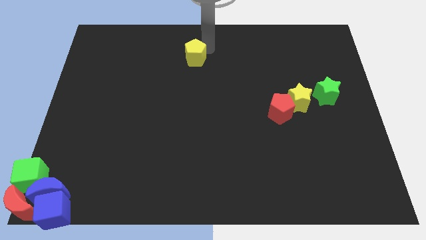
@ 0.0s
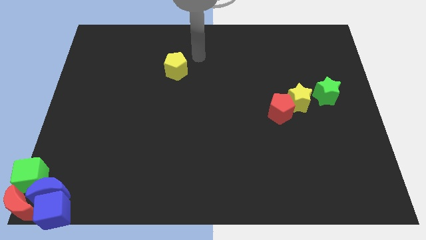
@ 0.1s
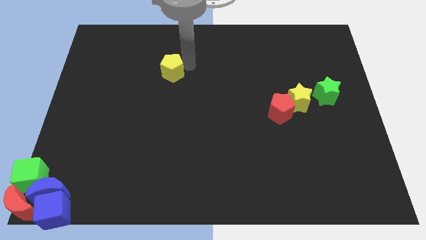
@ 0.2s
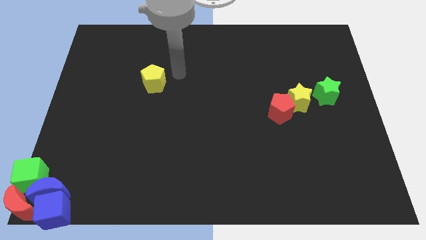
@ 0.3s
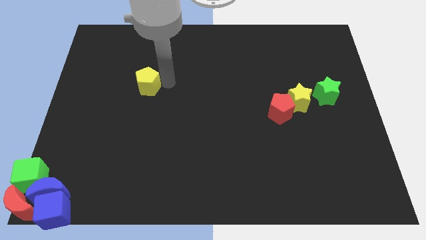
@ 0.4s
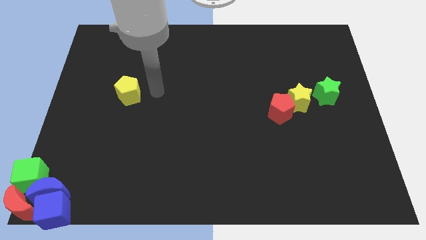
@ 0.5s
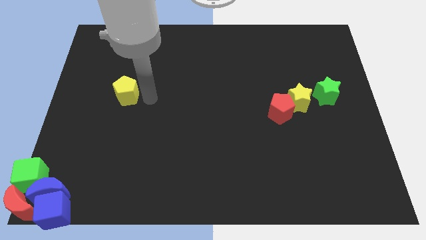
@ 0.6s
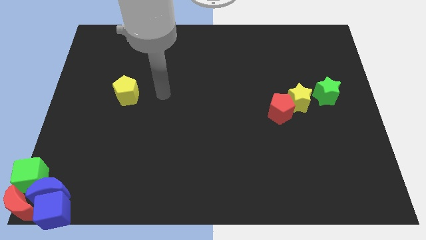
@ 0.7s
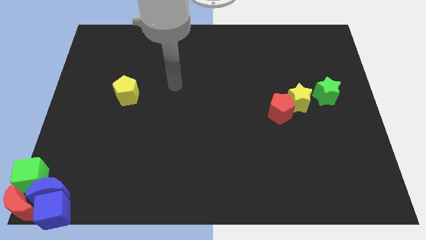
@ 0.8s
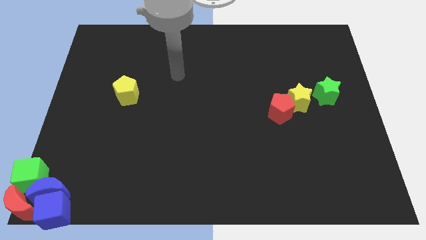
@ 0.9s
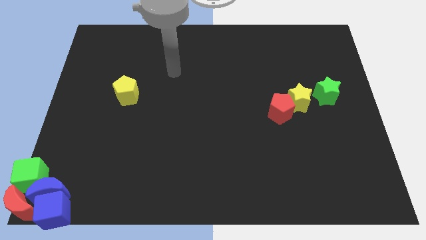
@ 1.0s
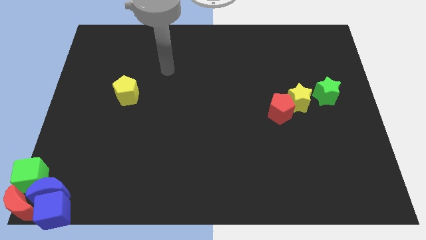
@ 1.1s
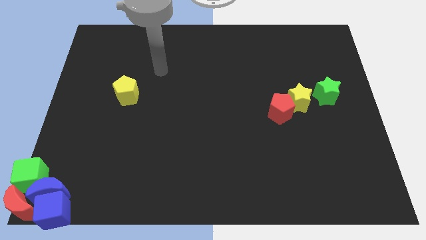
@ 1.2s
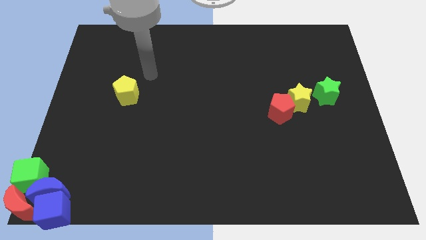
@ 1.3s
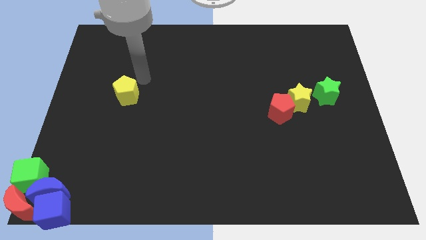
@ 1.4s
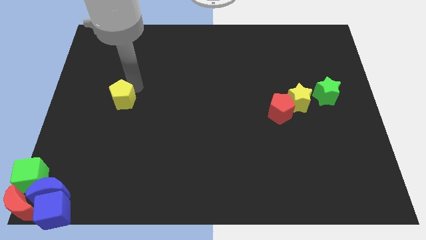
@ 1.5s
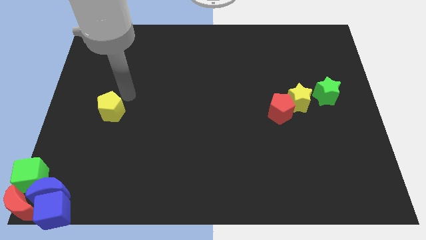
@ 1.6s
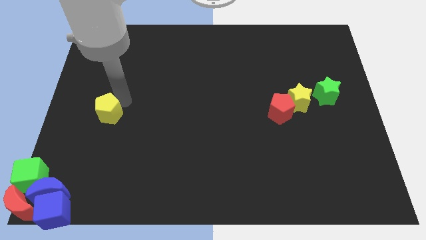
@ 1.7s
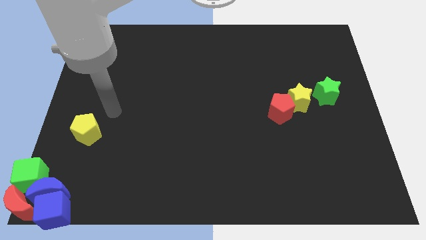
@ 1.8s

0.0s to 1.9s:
move the yellow pentagon towards the bottom

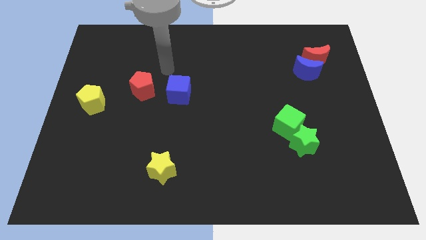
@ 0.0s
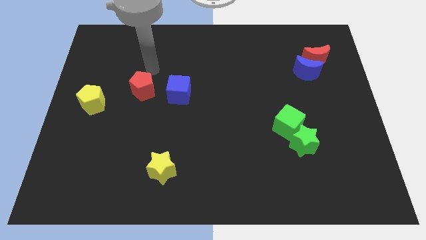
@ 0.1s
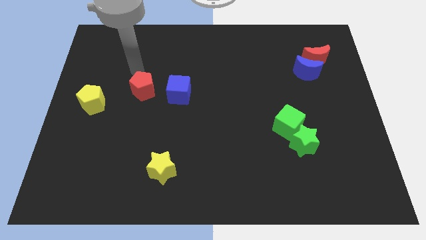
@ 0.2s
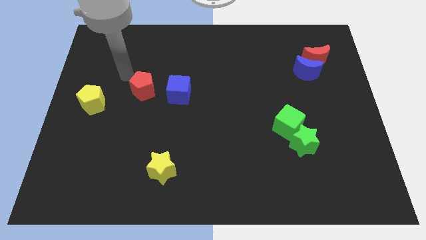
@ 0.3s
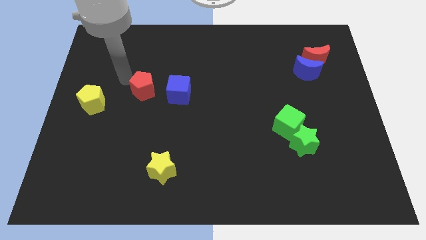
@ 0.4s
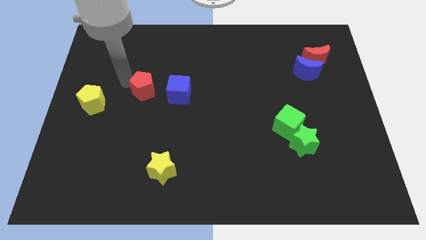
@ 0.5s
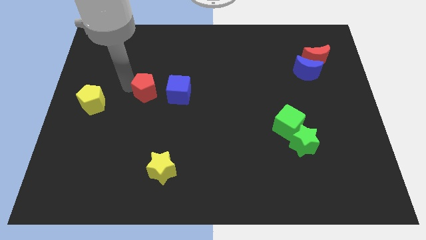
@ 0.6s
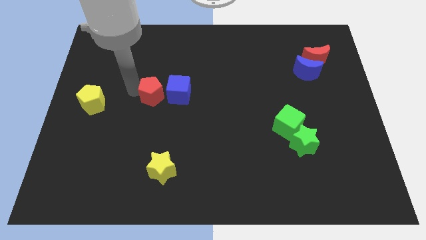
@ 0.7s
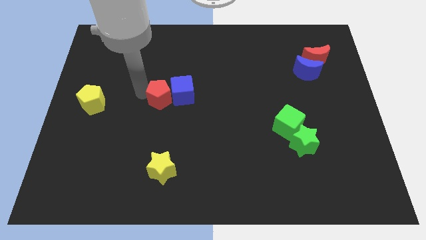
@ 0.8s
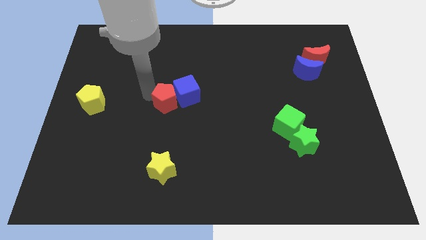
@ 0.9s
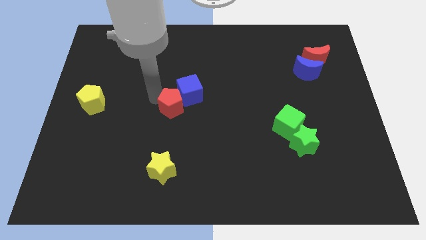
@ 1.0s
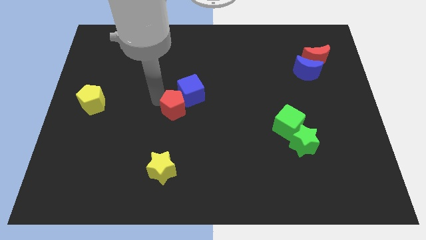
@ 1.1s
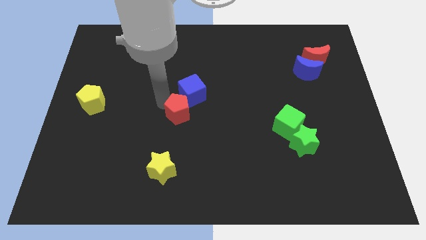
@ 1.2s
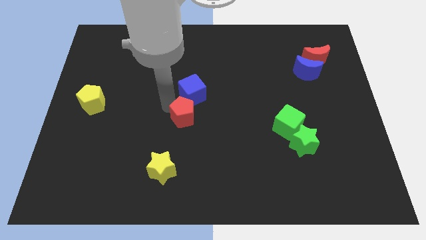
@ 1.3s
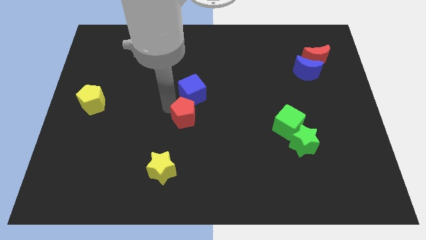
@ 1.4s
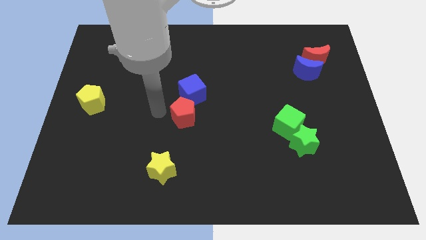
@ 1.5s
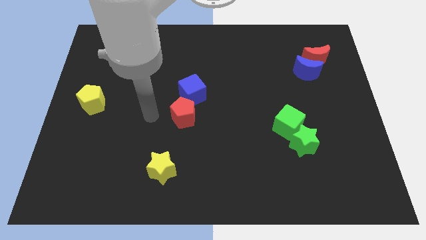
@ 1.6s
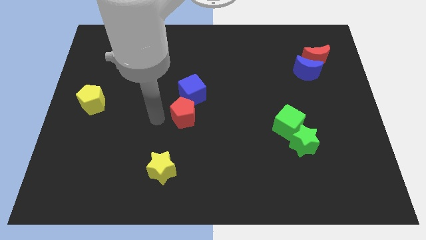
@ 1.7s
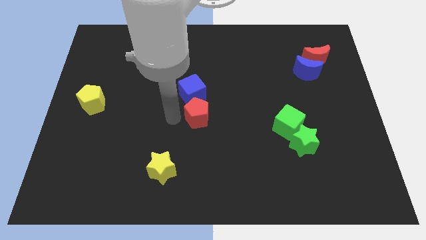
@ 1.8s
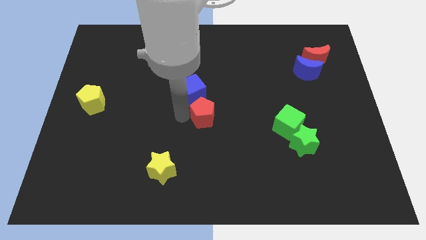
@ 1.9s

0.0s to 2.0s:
put the red pentagon below the blue cube

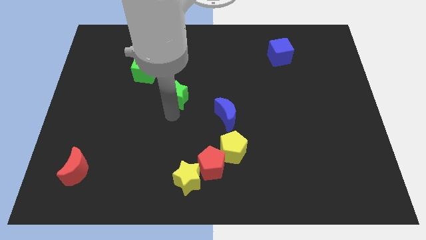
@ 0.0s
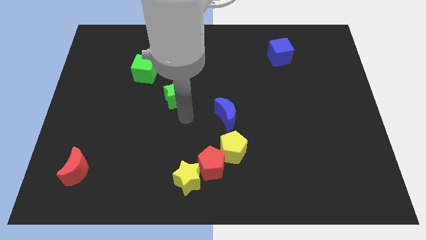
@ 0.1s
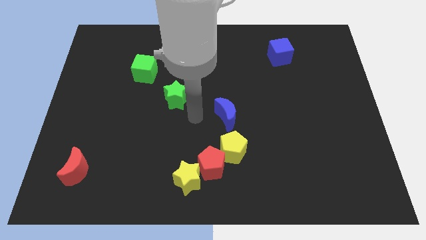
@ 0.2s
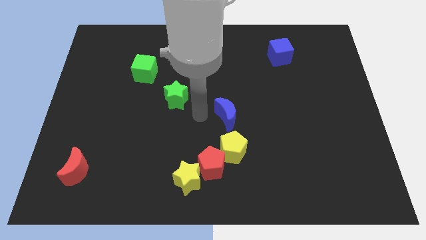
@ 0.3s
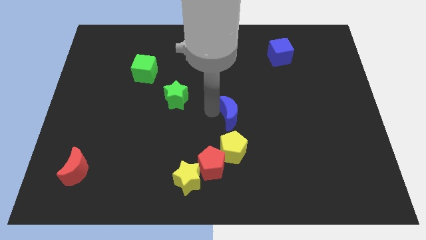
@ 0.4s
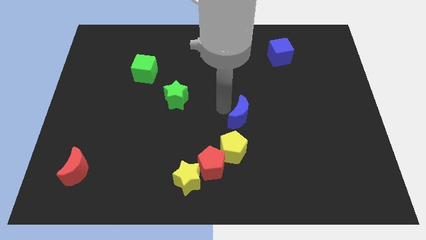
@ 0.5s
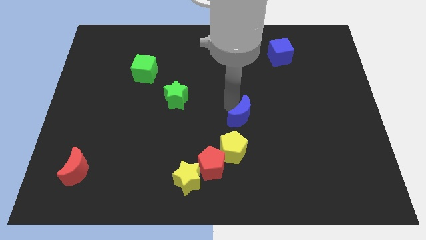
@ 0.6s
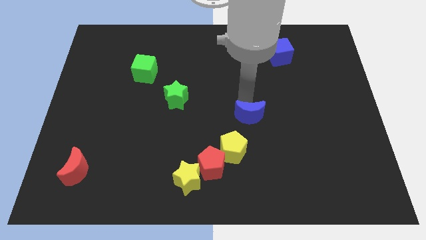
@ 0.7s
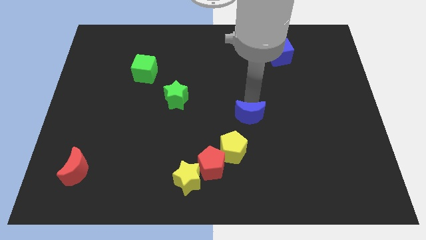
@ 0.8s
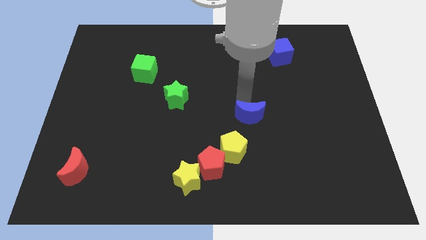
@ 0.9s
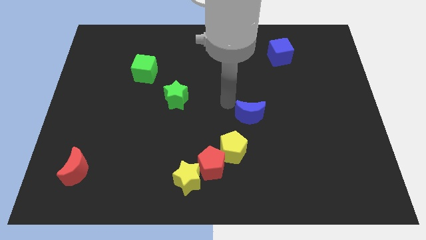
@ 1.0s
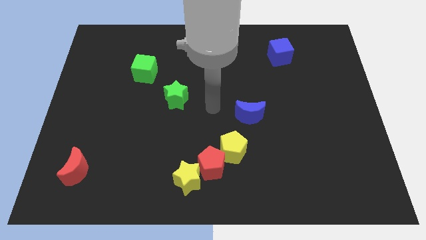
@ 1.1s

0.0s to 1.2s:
move the blue moon slightly to the right

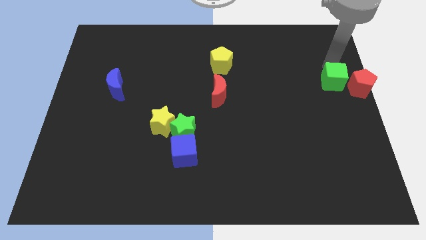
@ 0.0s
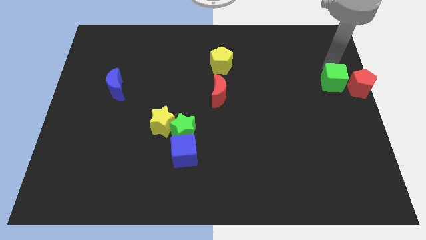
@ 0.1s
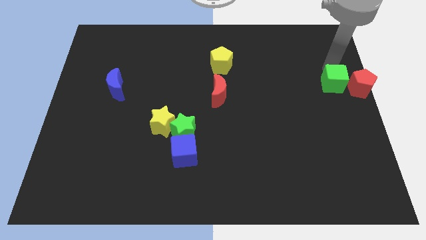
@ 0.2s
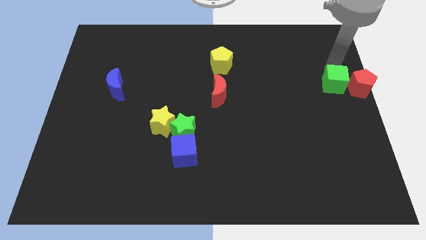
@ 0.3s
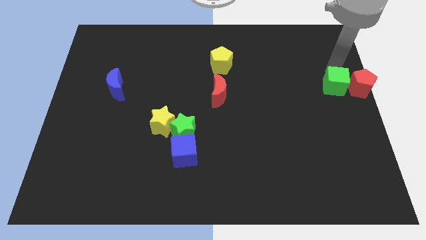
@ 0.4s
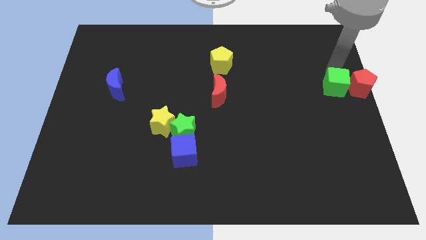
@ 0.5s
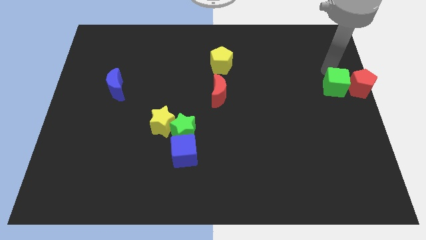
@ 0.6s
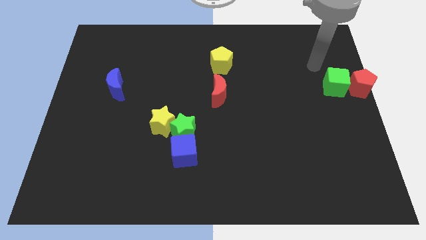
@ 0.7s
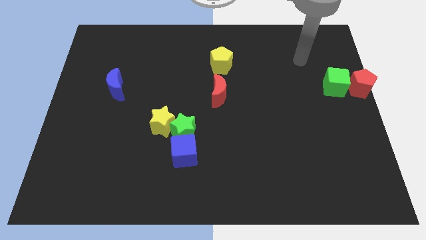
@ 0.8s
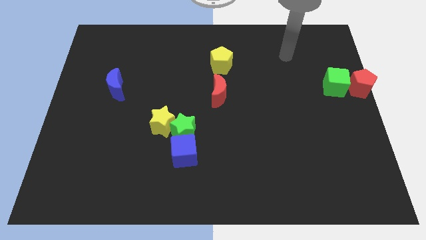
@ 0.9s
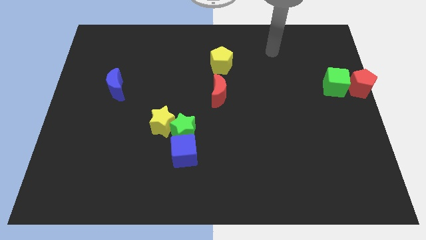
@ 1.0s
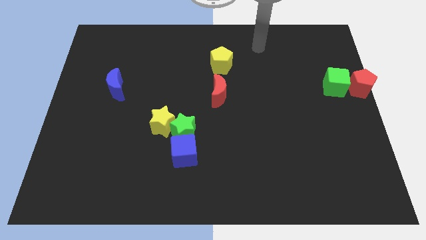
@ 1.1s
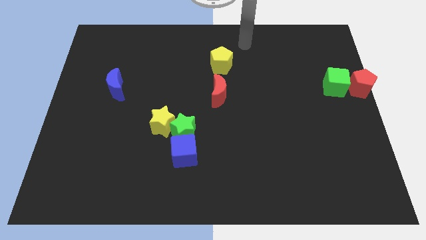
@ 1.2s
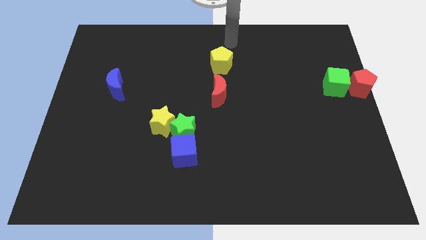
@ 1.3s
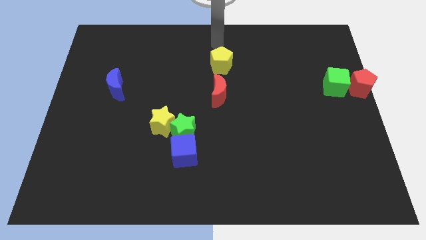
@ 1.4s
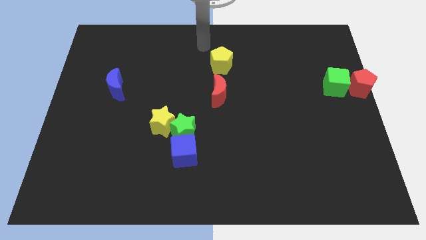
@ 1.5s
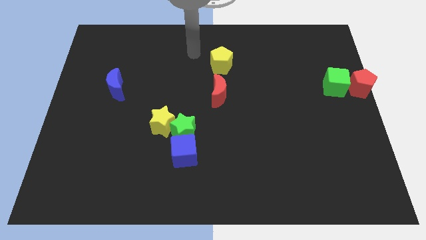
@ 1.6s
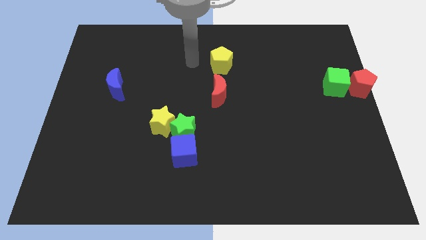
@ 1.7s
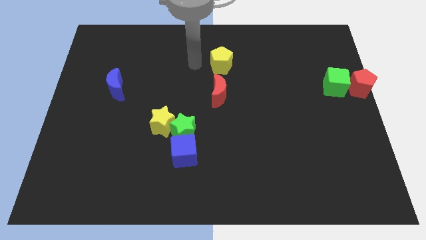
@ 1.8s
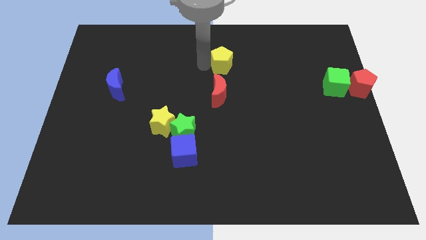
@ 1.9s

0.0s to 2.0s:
move your arm towards the yellow pentagon

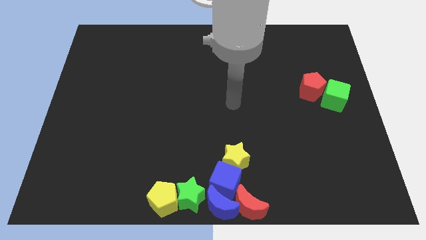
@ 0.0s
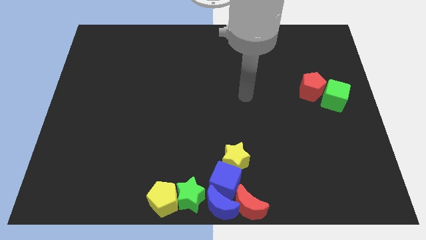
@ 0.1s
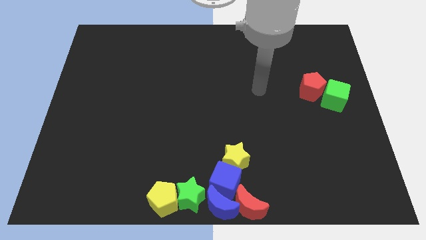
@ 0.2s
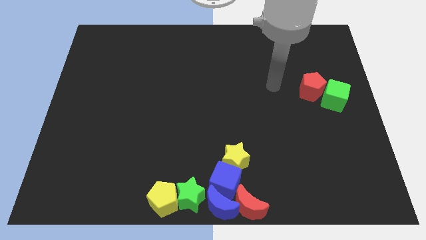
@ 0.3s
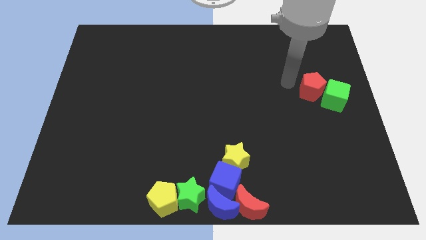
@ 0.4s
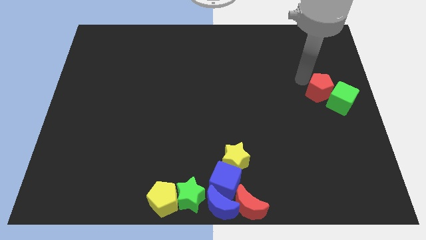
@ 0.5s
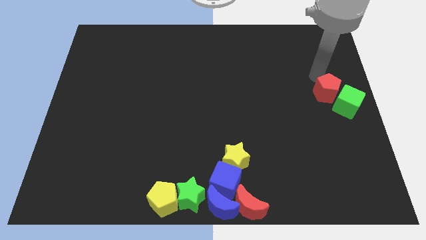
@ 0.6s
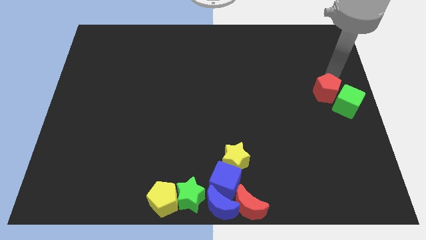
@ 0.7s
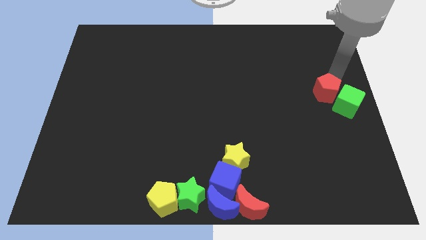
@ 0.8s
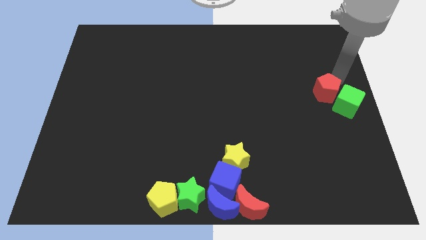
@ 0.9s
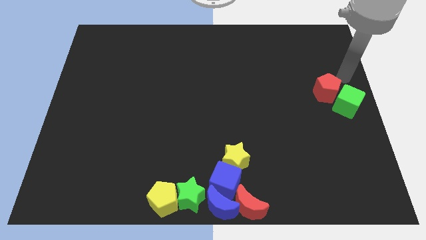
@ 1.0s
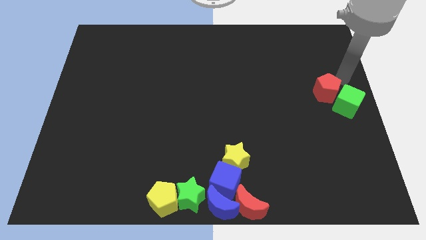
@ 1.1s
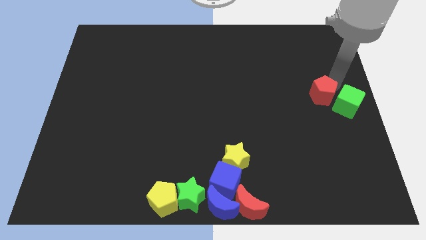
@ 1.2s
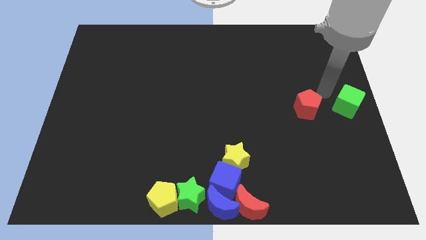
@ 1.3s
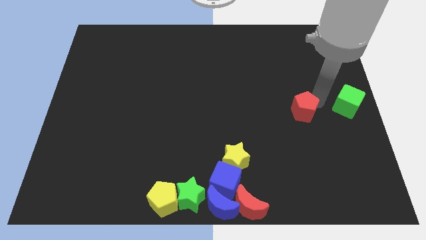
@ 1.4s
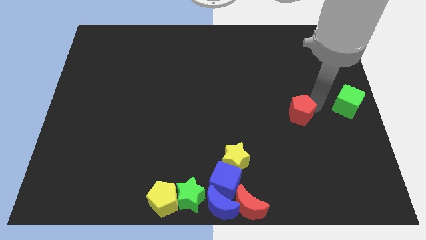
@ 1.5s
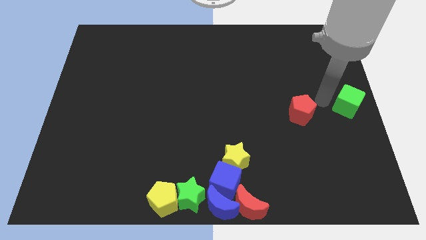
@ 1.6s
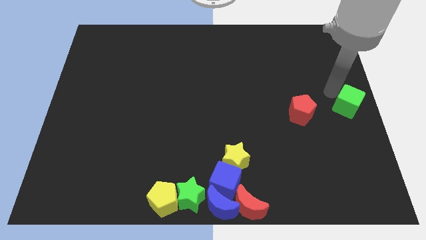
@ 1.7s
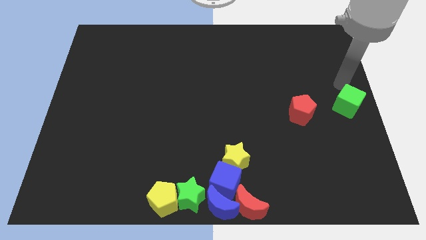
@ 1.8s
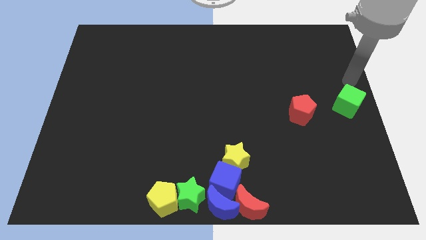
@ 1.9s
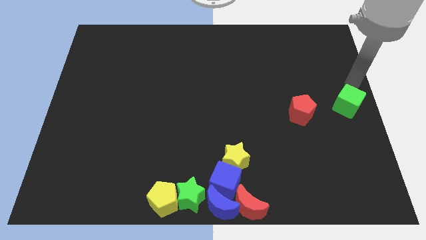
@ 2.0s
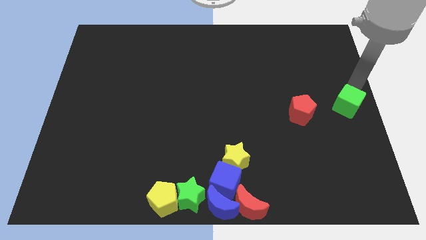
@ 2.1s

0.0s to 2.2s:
separate the red pentagon from the green cube
